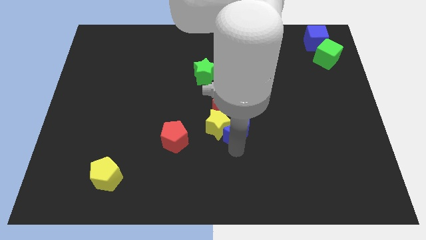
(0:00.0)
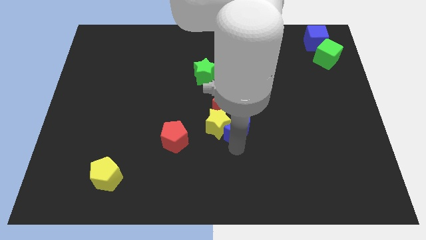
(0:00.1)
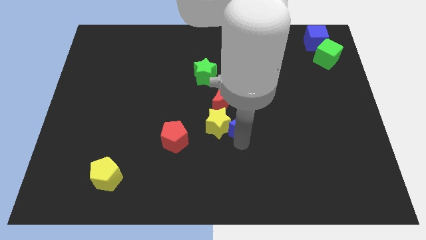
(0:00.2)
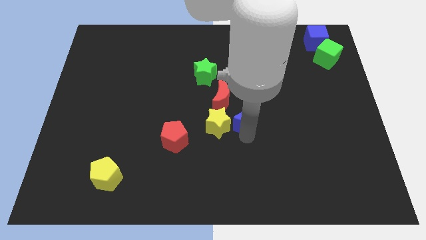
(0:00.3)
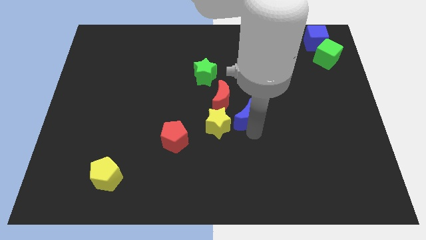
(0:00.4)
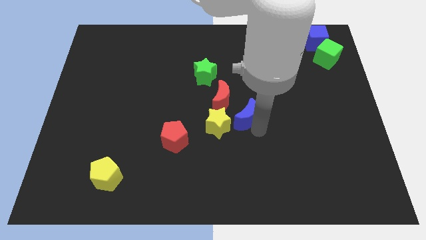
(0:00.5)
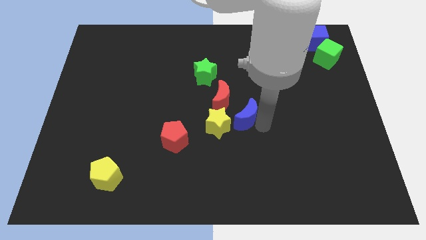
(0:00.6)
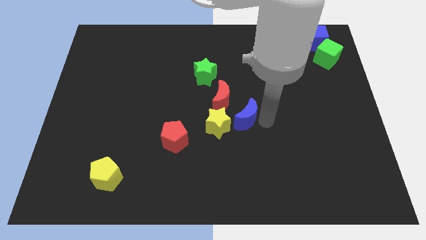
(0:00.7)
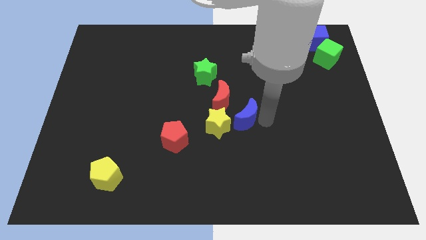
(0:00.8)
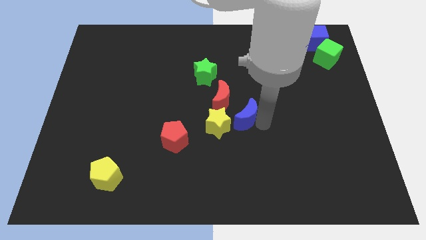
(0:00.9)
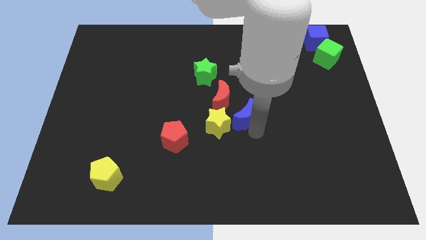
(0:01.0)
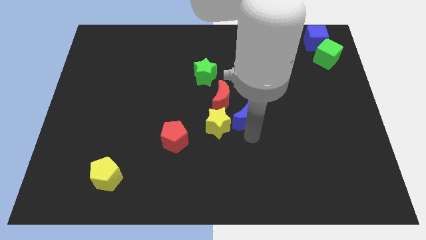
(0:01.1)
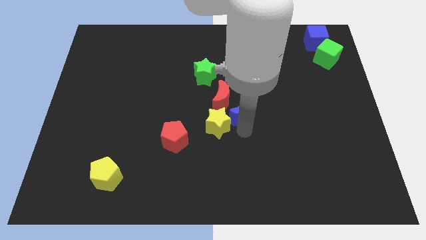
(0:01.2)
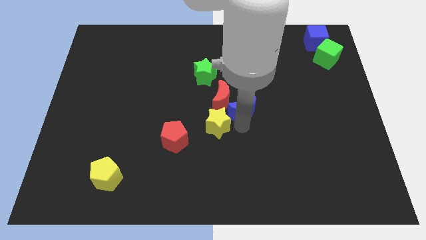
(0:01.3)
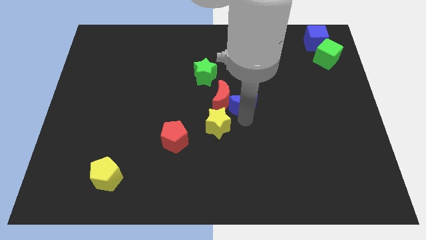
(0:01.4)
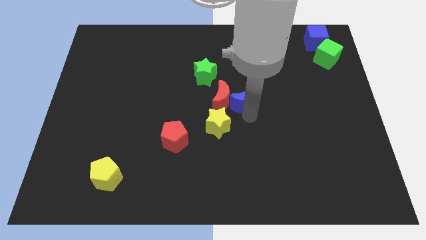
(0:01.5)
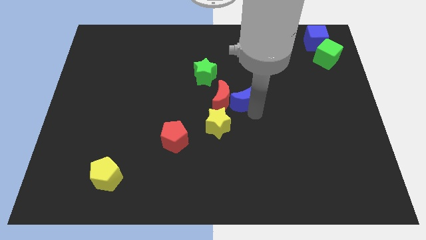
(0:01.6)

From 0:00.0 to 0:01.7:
push the blue crescent slightly towards up

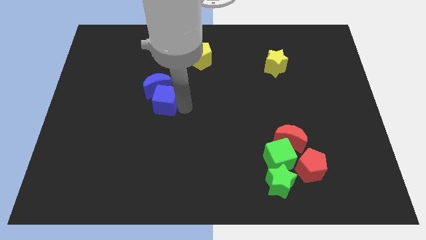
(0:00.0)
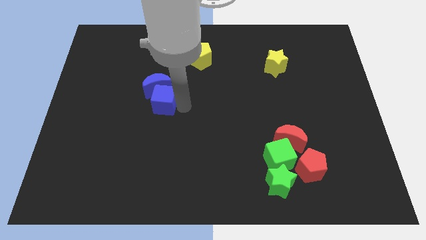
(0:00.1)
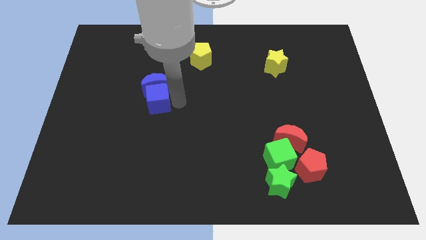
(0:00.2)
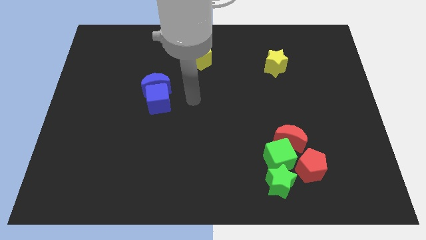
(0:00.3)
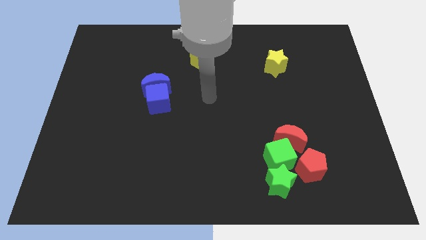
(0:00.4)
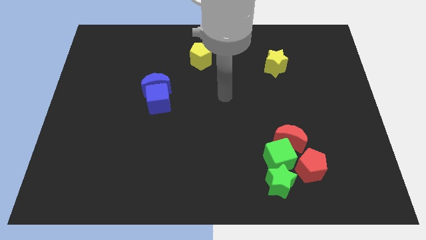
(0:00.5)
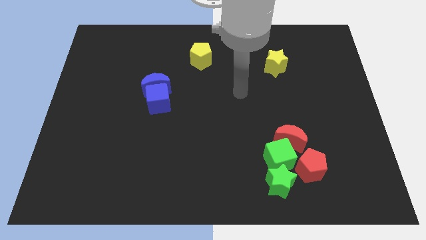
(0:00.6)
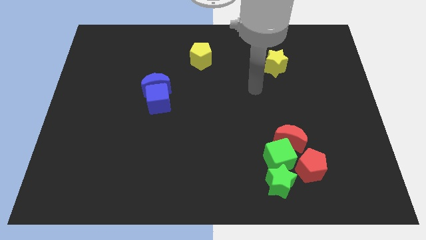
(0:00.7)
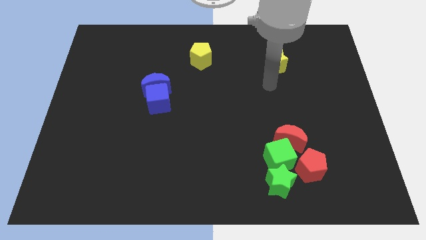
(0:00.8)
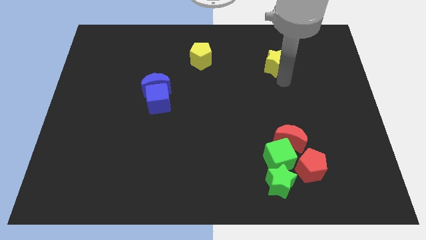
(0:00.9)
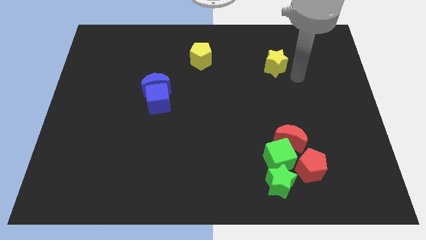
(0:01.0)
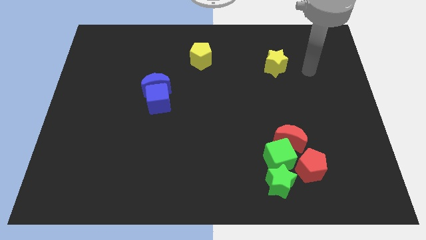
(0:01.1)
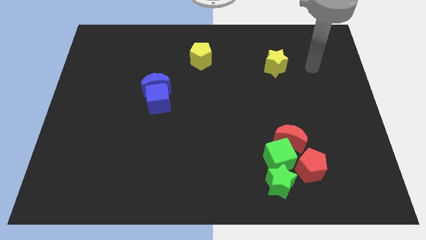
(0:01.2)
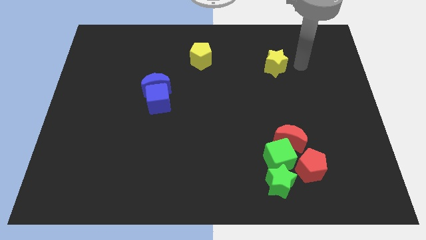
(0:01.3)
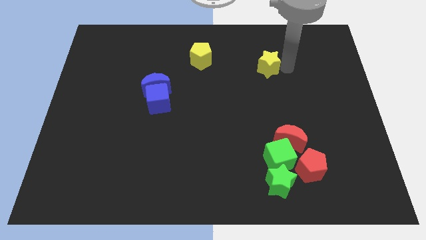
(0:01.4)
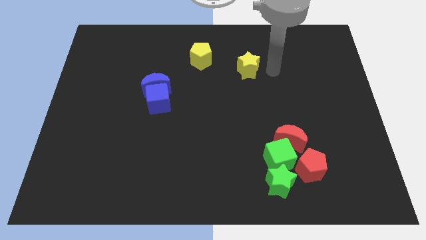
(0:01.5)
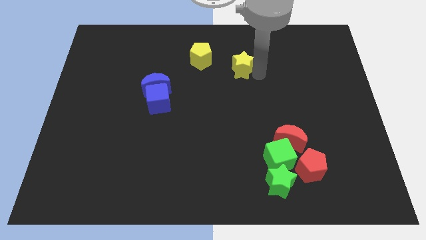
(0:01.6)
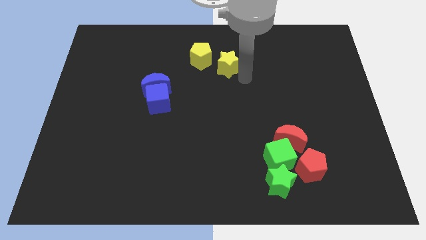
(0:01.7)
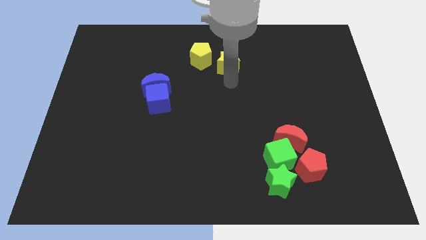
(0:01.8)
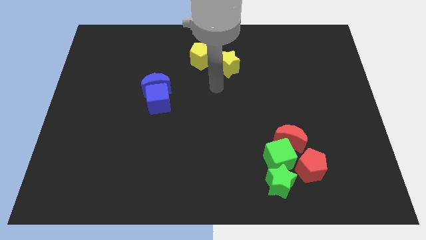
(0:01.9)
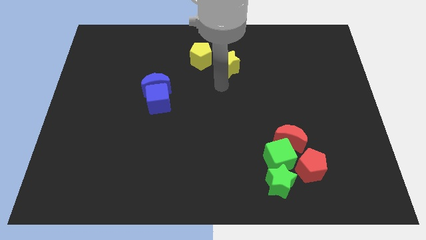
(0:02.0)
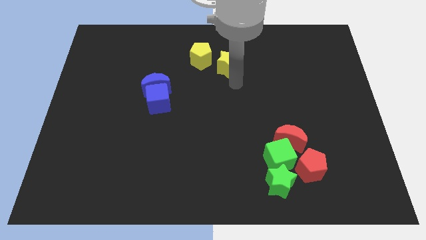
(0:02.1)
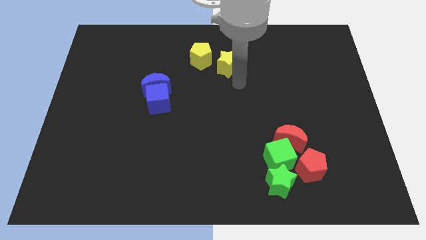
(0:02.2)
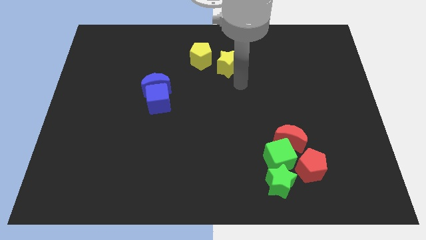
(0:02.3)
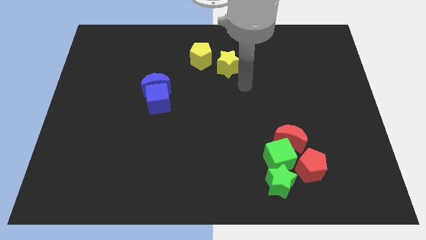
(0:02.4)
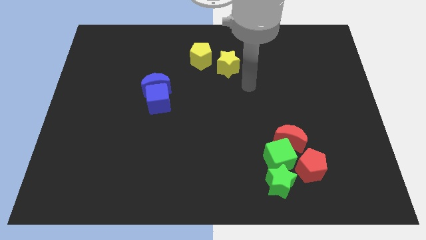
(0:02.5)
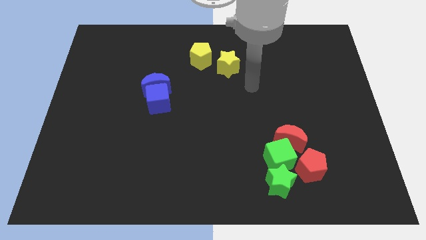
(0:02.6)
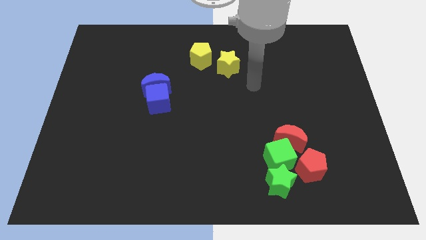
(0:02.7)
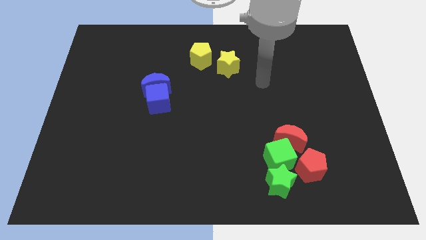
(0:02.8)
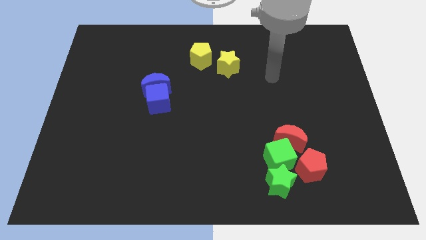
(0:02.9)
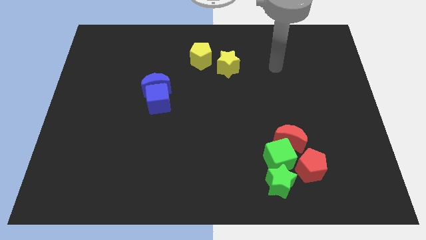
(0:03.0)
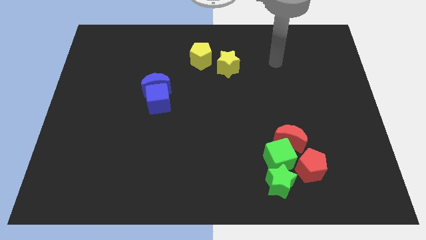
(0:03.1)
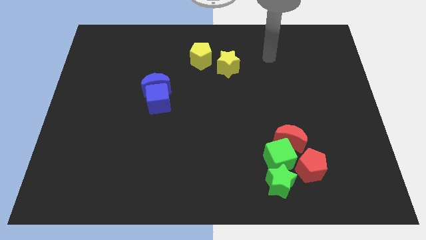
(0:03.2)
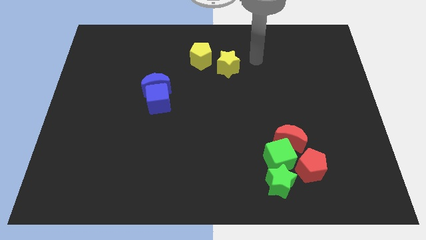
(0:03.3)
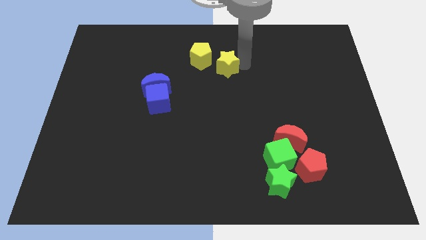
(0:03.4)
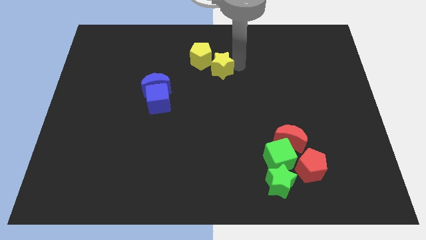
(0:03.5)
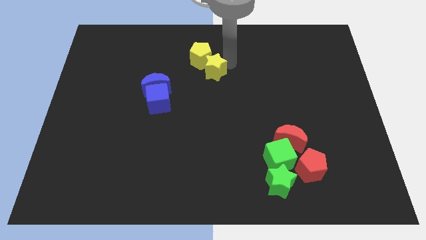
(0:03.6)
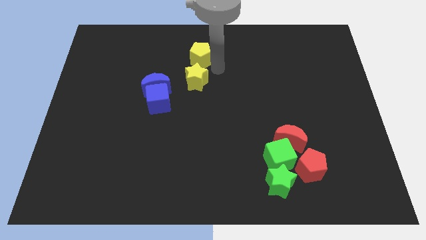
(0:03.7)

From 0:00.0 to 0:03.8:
place the yellow star below the yellow pentagon

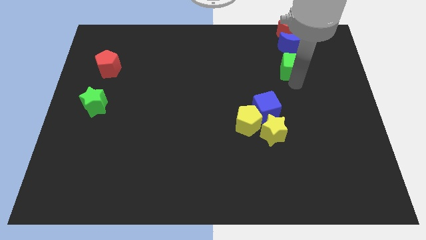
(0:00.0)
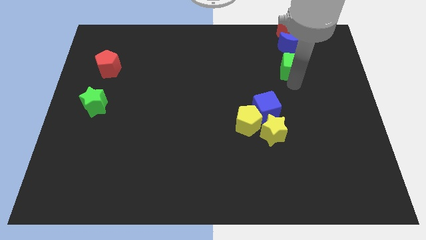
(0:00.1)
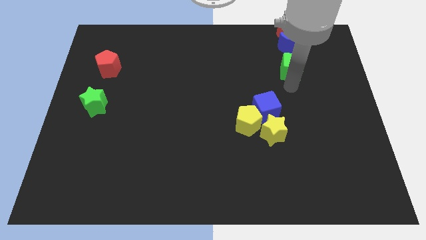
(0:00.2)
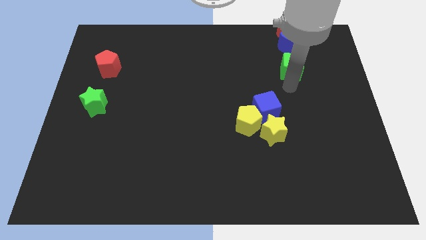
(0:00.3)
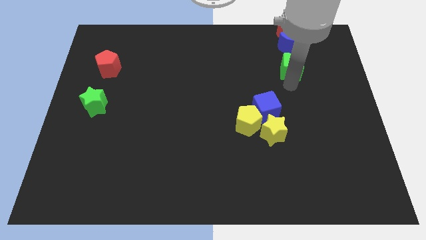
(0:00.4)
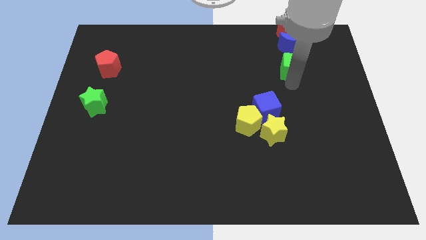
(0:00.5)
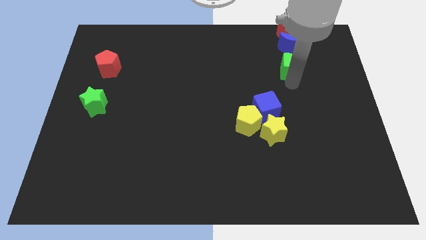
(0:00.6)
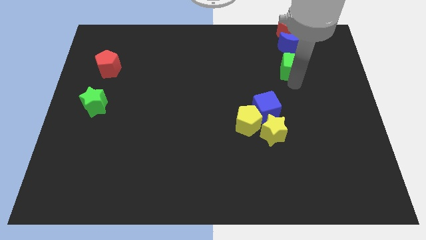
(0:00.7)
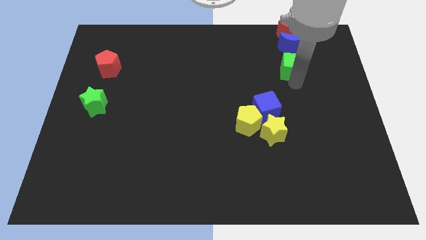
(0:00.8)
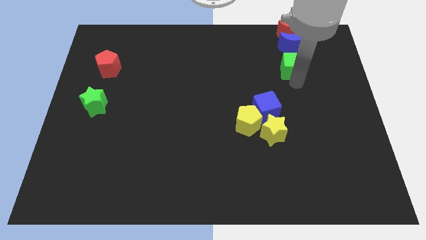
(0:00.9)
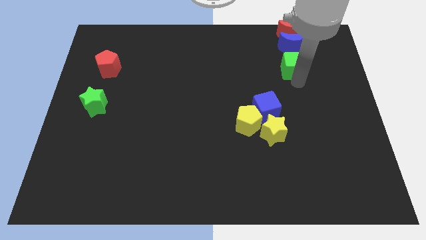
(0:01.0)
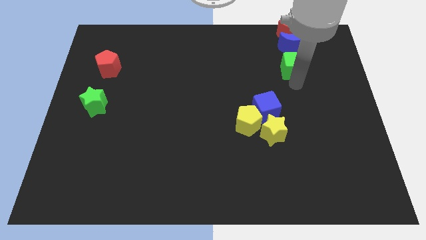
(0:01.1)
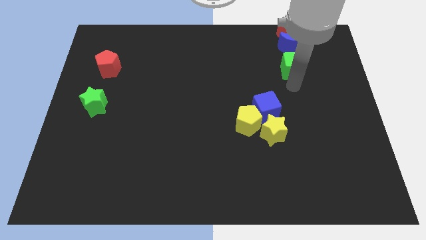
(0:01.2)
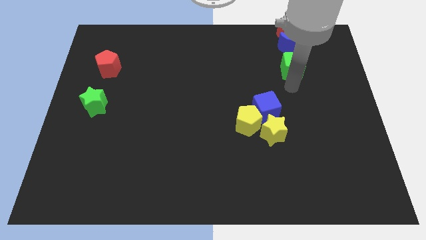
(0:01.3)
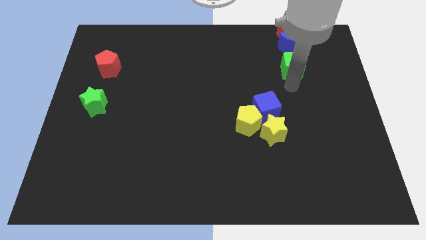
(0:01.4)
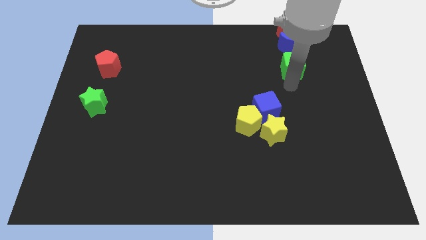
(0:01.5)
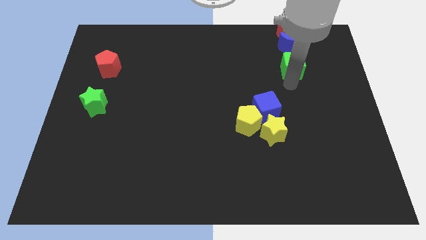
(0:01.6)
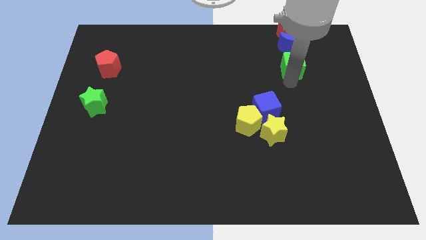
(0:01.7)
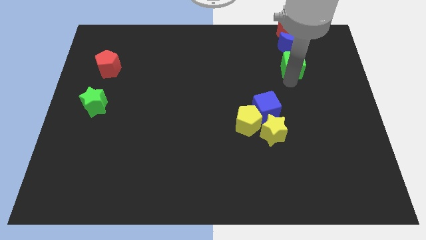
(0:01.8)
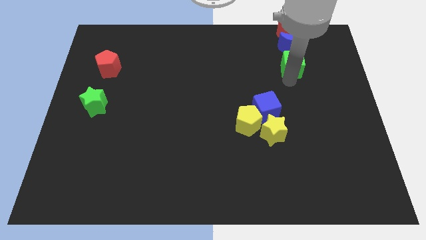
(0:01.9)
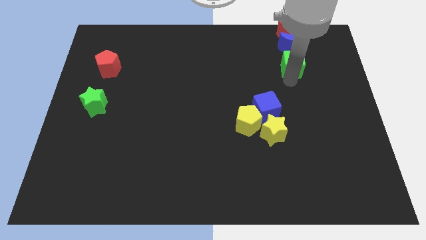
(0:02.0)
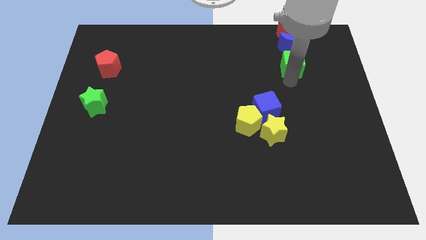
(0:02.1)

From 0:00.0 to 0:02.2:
place the green cube below the blue moon

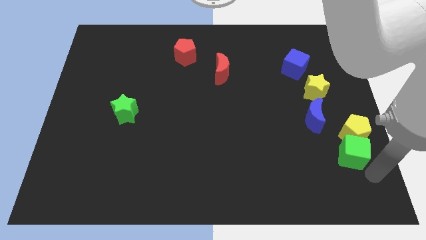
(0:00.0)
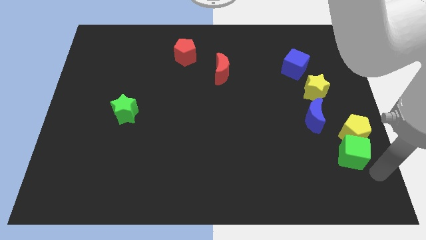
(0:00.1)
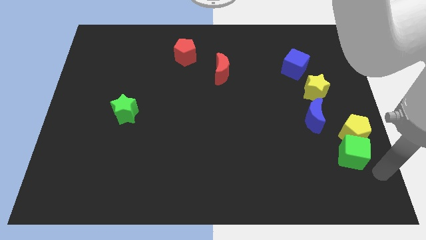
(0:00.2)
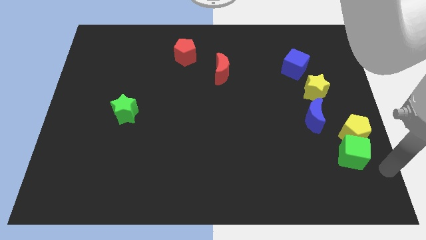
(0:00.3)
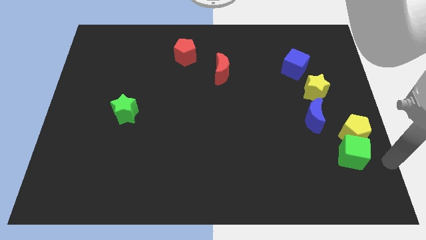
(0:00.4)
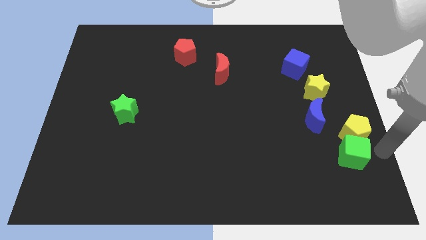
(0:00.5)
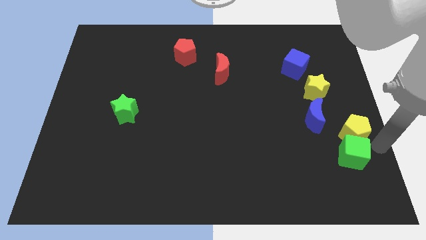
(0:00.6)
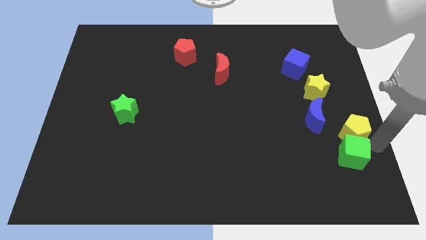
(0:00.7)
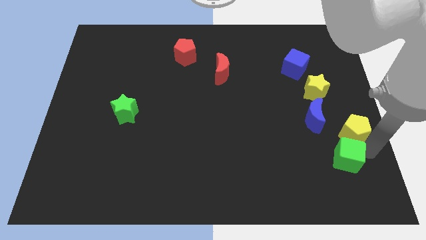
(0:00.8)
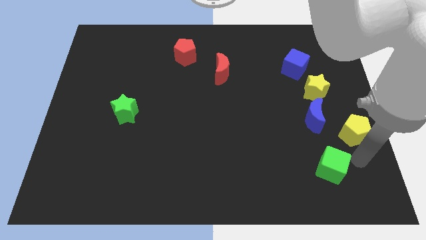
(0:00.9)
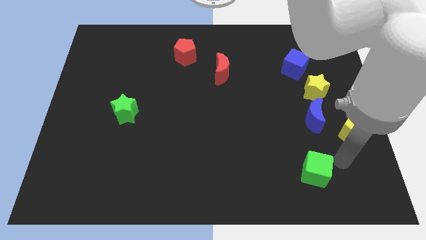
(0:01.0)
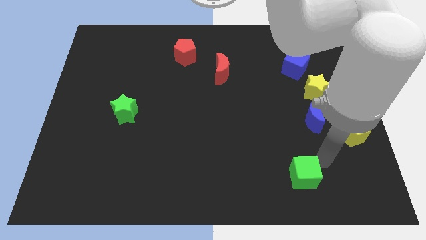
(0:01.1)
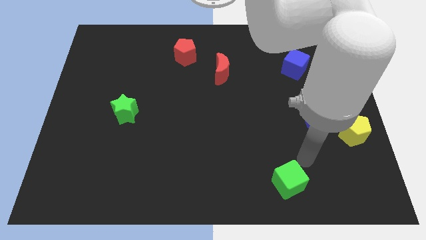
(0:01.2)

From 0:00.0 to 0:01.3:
push green cube diagonally downwards to the bottom
